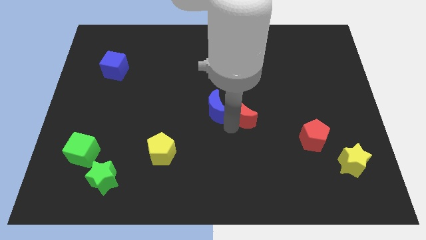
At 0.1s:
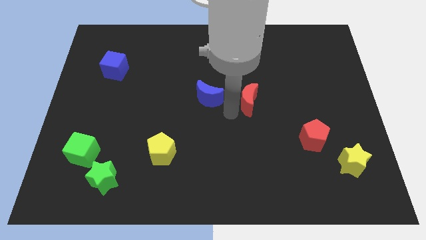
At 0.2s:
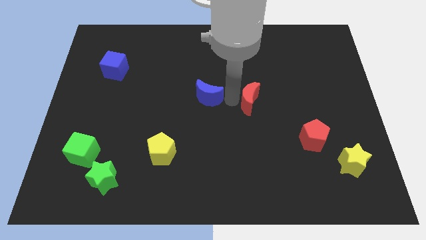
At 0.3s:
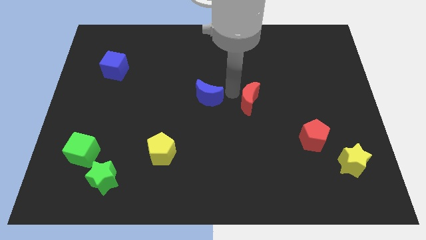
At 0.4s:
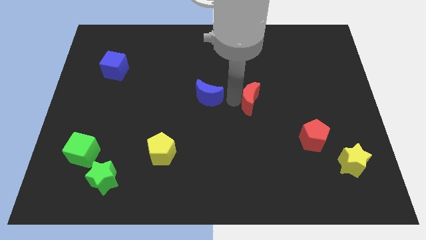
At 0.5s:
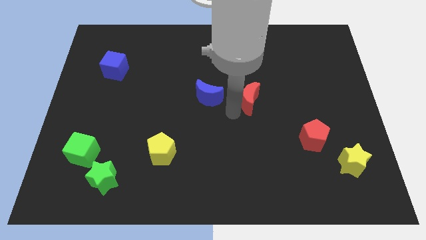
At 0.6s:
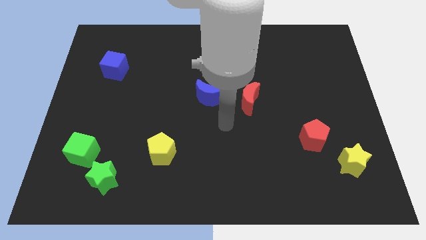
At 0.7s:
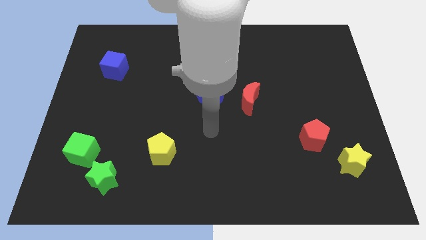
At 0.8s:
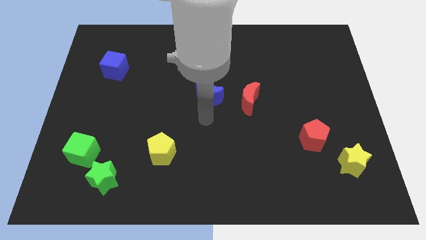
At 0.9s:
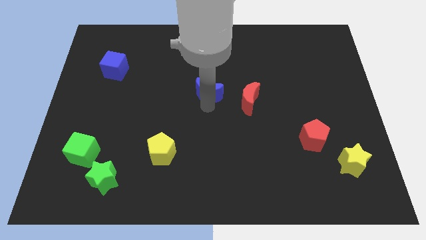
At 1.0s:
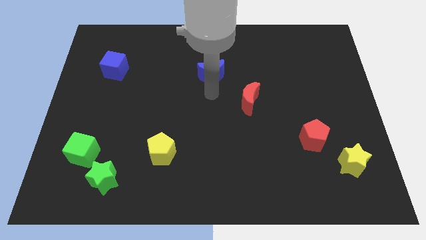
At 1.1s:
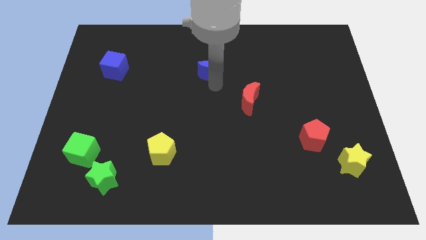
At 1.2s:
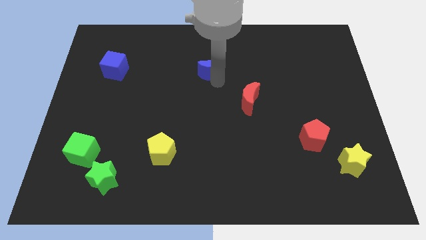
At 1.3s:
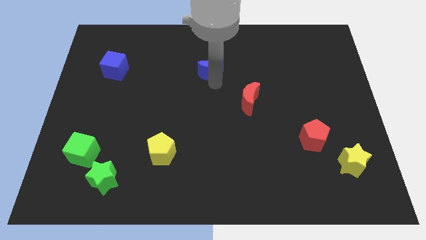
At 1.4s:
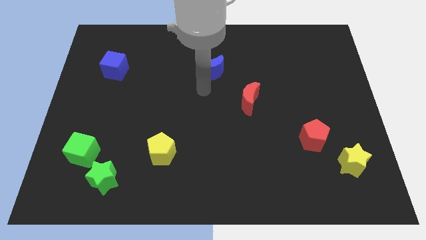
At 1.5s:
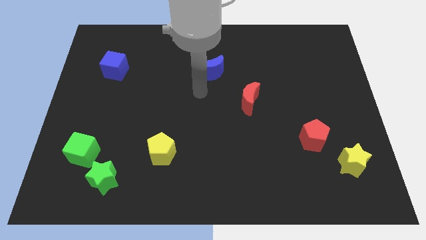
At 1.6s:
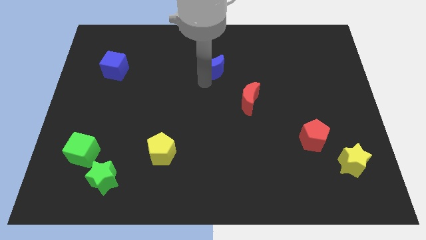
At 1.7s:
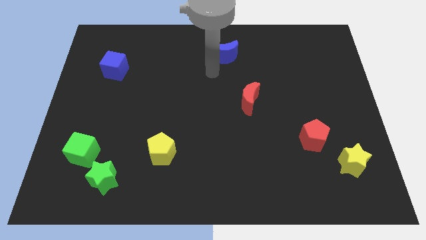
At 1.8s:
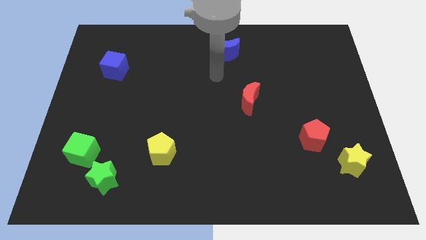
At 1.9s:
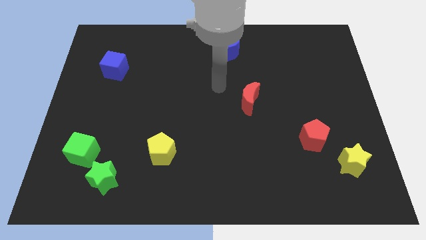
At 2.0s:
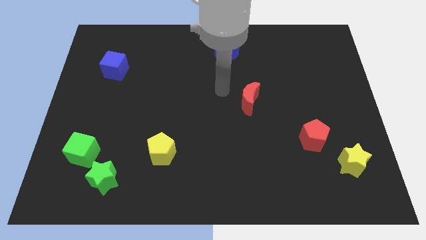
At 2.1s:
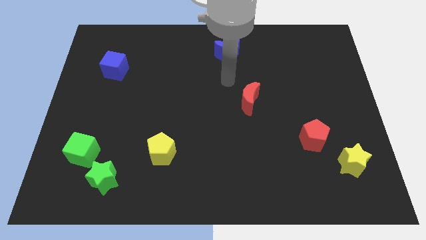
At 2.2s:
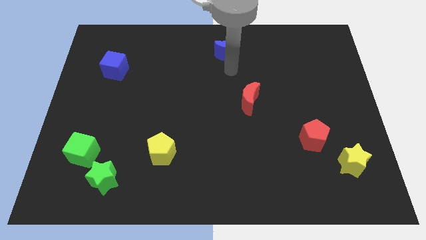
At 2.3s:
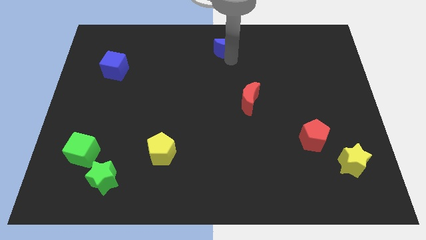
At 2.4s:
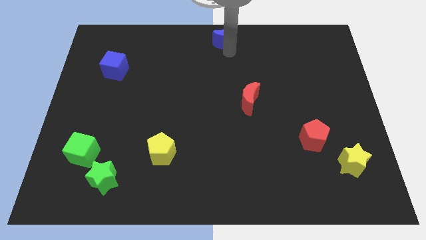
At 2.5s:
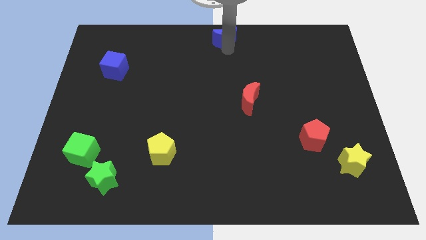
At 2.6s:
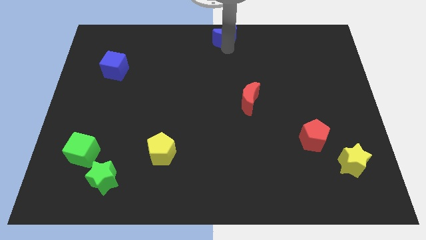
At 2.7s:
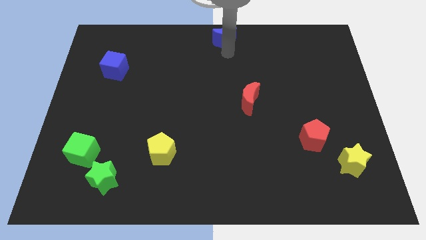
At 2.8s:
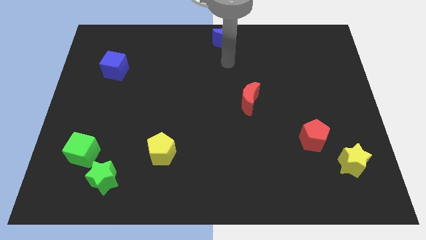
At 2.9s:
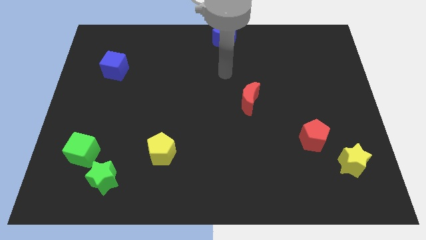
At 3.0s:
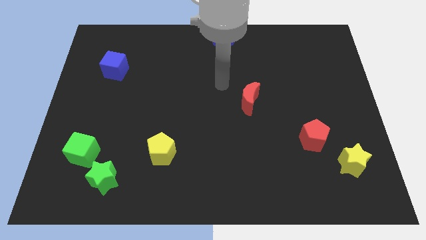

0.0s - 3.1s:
place the blue crescent at top center of the board

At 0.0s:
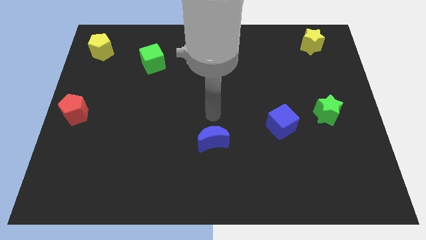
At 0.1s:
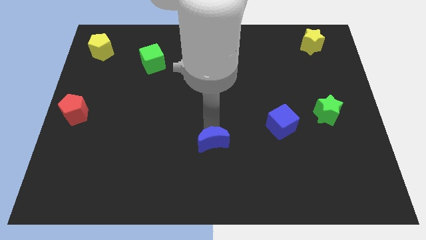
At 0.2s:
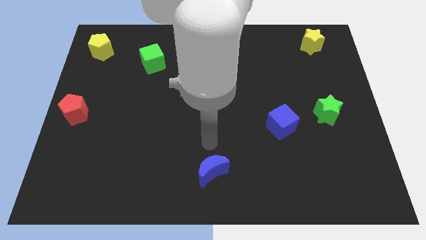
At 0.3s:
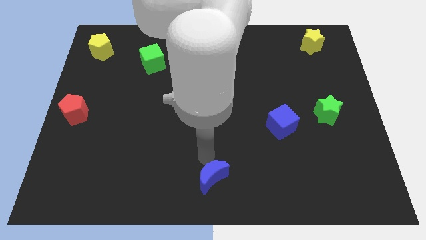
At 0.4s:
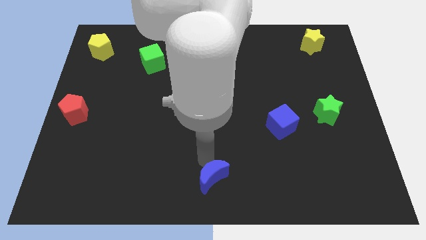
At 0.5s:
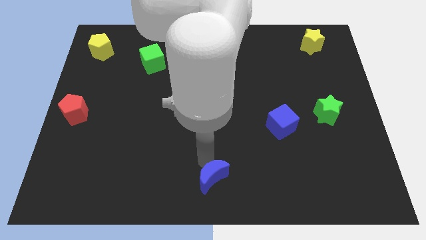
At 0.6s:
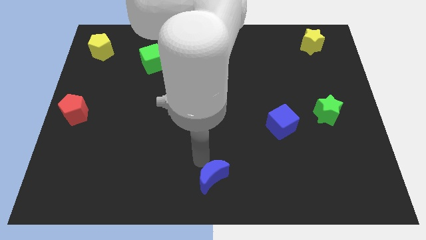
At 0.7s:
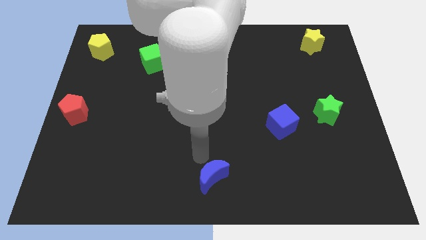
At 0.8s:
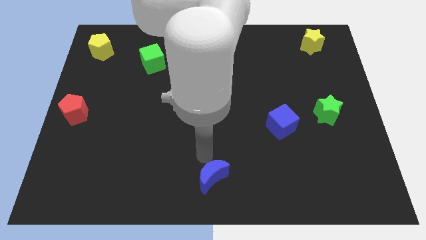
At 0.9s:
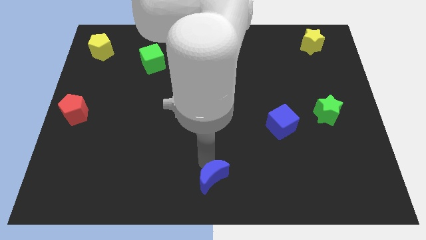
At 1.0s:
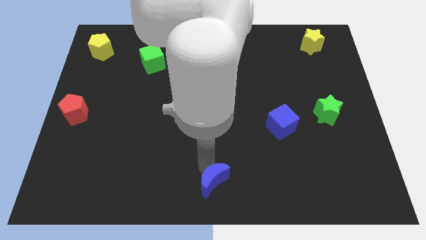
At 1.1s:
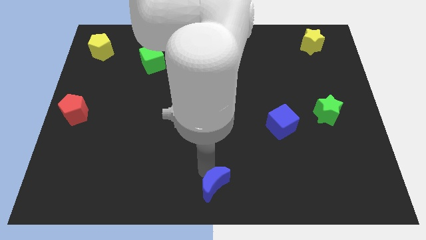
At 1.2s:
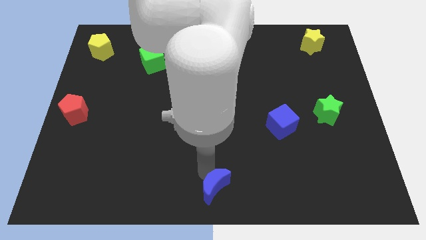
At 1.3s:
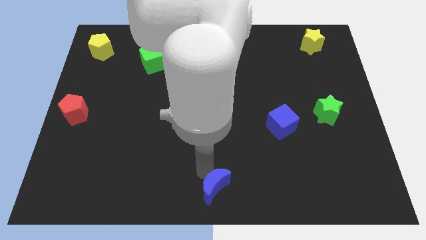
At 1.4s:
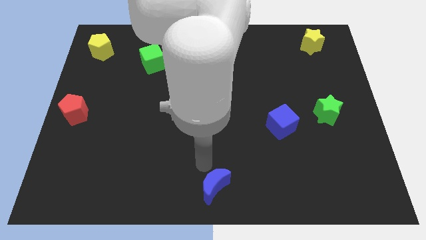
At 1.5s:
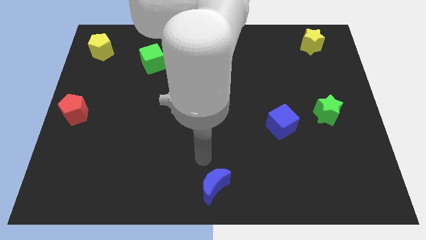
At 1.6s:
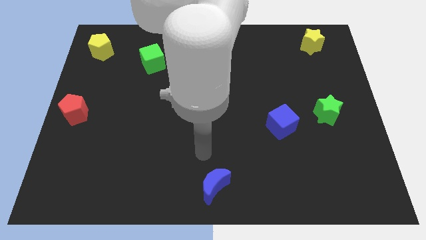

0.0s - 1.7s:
move the blue crescent towards the bottom center of the board

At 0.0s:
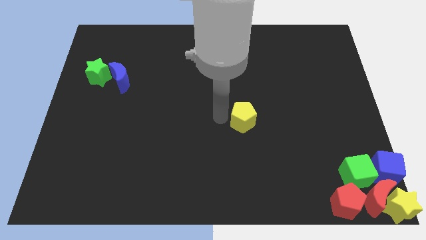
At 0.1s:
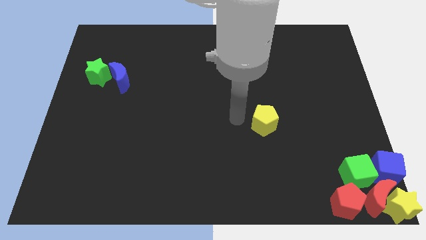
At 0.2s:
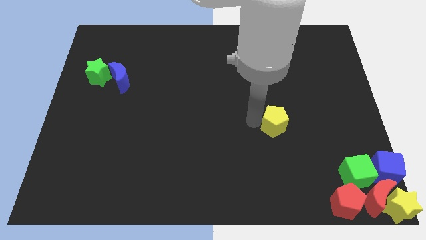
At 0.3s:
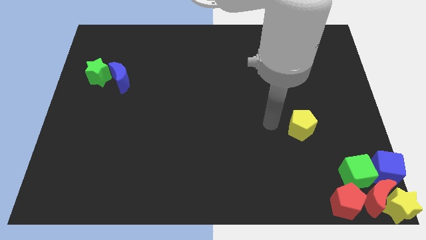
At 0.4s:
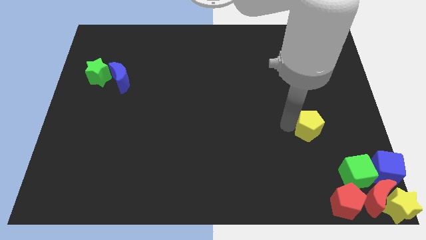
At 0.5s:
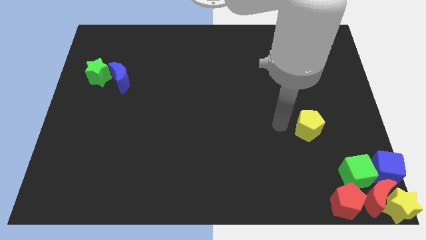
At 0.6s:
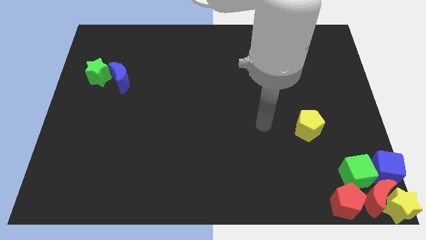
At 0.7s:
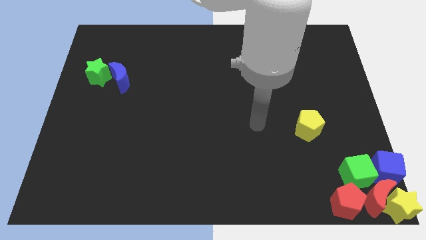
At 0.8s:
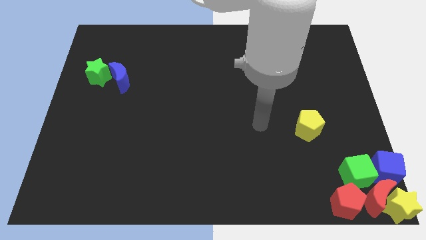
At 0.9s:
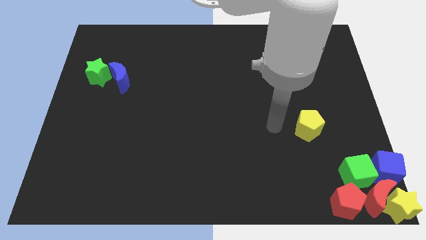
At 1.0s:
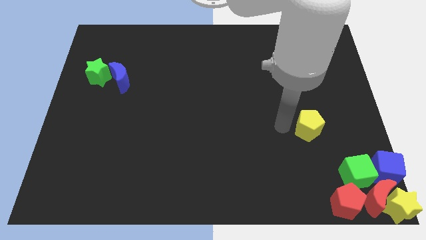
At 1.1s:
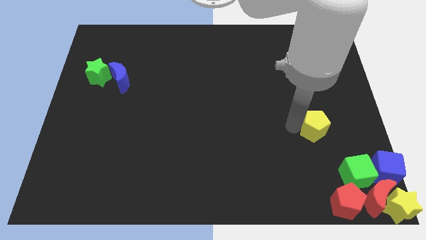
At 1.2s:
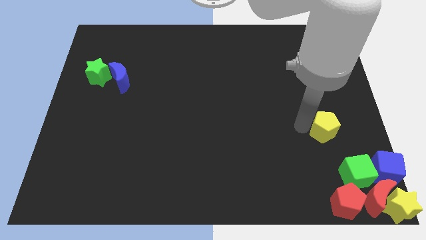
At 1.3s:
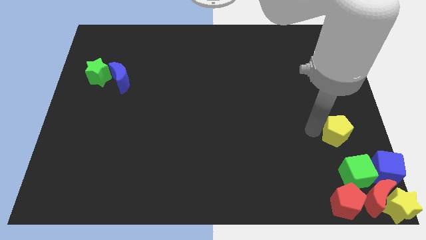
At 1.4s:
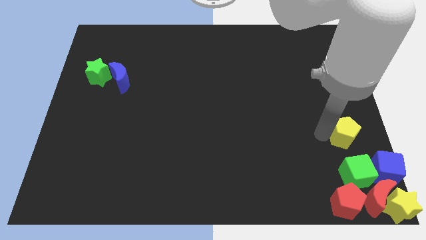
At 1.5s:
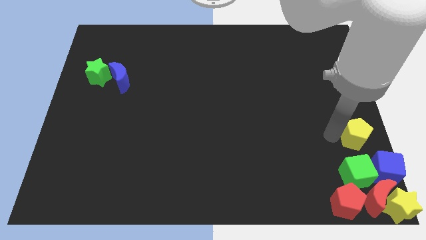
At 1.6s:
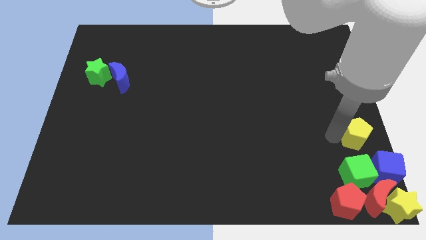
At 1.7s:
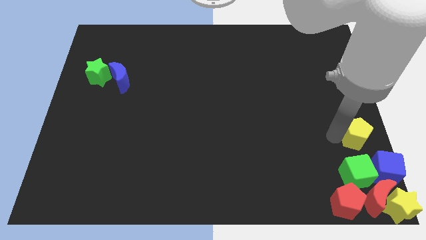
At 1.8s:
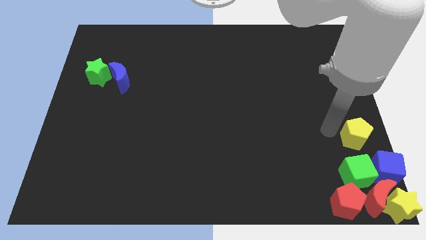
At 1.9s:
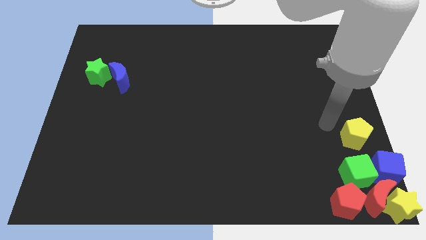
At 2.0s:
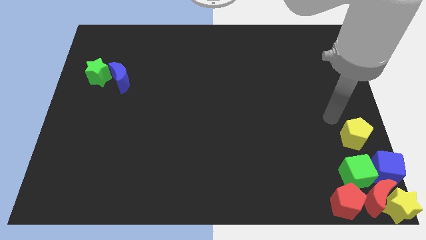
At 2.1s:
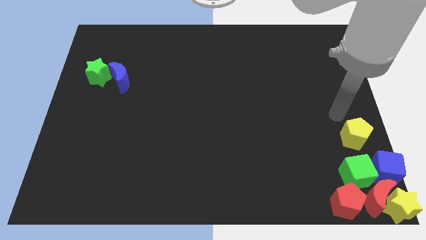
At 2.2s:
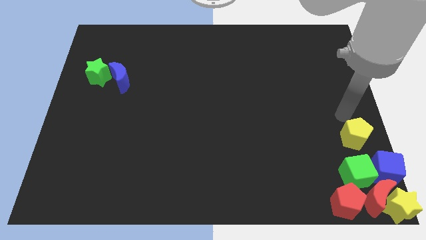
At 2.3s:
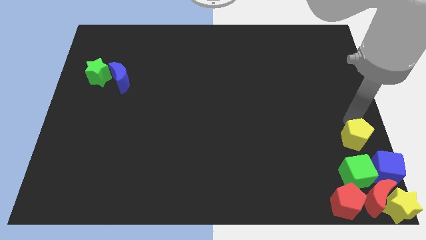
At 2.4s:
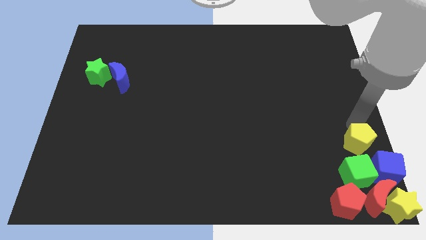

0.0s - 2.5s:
push yellow pentagon above green cube

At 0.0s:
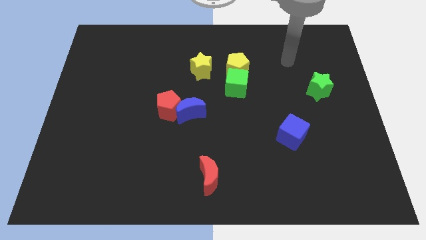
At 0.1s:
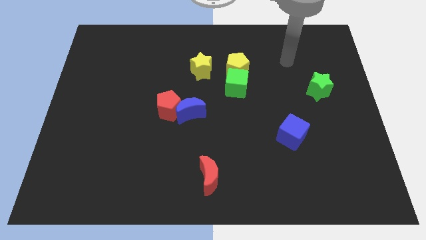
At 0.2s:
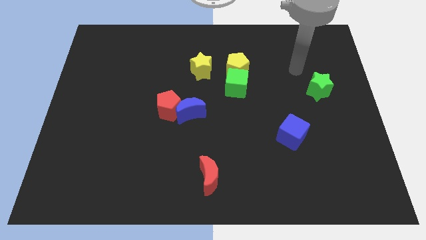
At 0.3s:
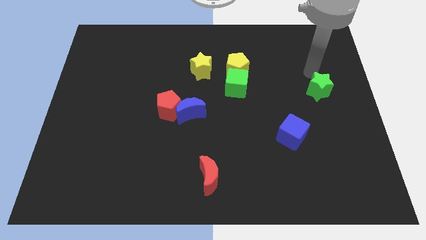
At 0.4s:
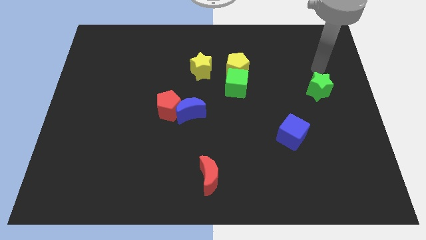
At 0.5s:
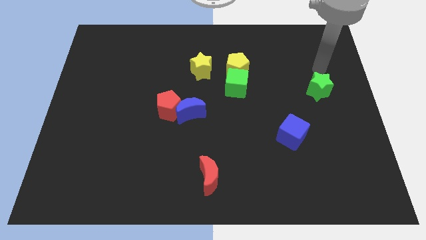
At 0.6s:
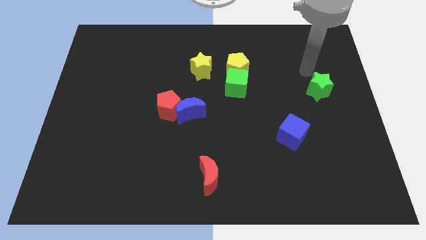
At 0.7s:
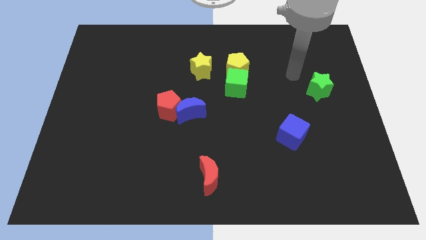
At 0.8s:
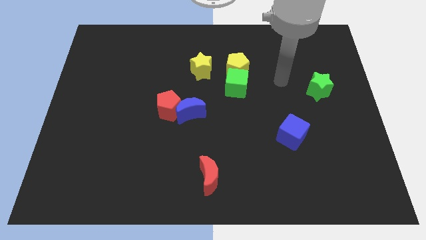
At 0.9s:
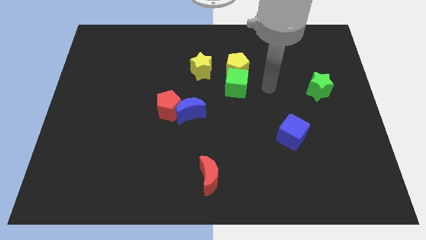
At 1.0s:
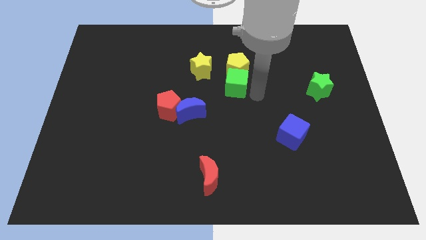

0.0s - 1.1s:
move your arm to the right of green cube

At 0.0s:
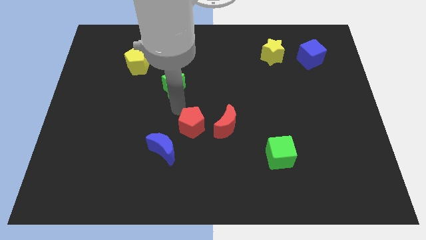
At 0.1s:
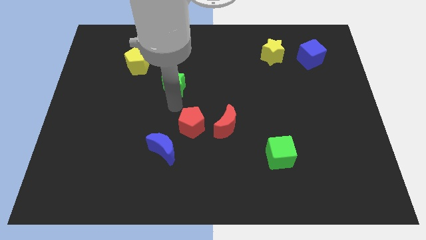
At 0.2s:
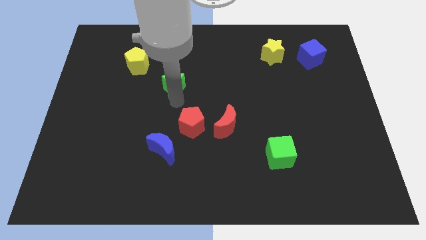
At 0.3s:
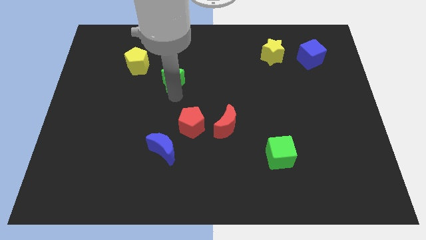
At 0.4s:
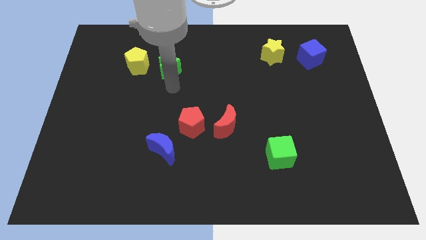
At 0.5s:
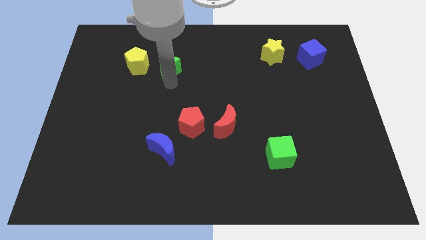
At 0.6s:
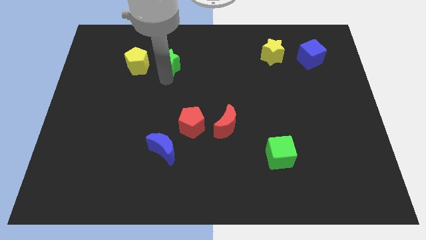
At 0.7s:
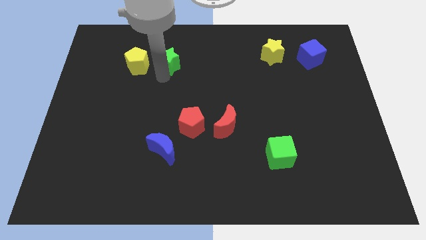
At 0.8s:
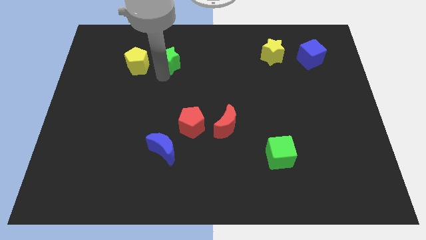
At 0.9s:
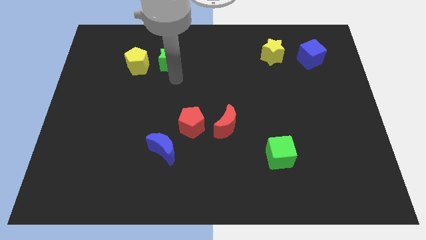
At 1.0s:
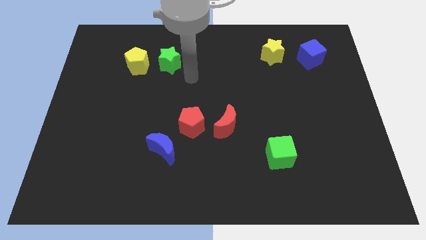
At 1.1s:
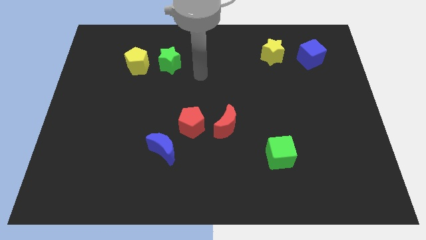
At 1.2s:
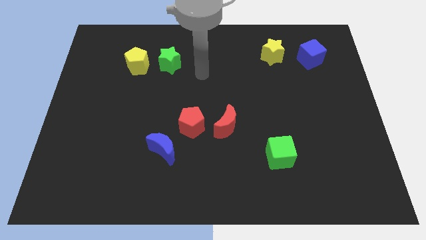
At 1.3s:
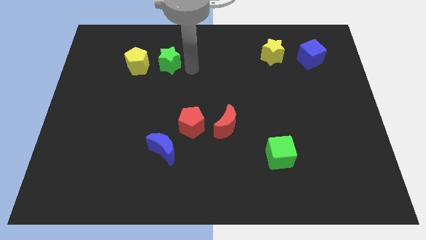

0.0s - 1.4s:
place the green star to the right side of the yellow pentagon
